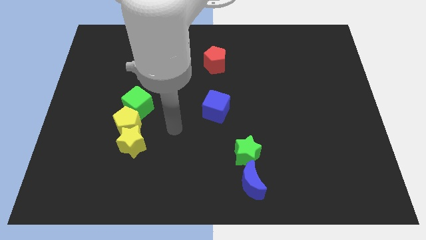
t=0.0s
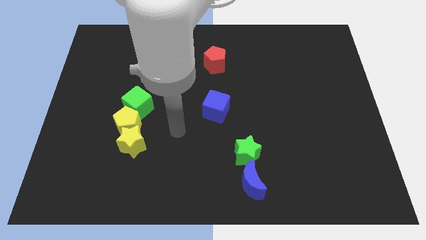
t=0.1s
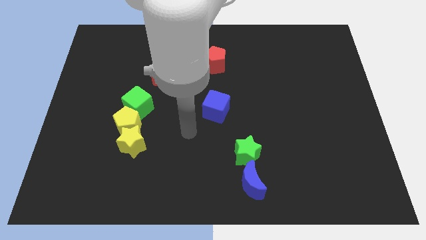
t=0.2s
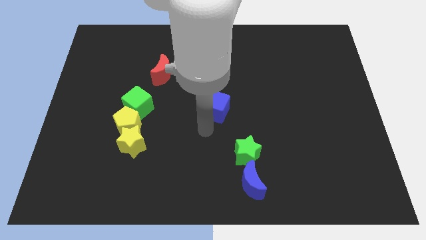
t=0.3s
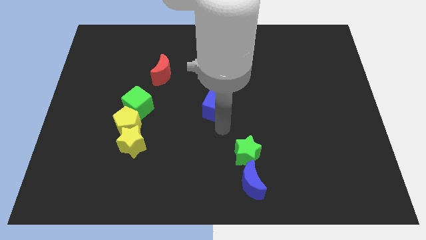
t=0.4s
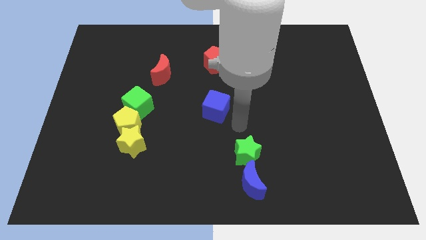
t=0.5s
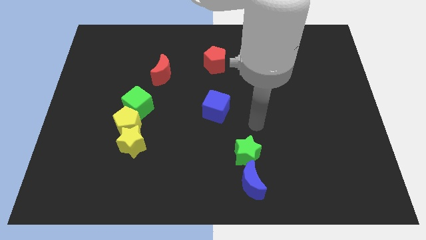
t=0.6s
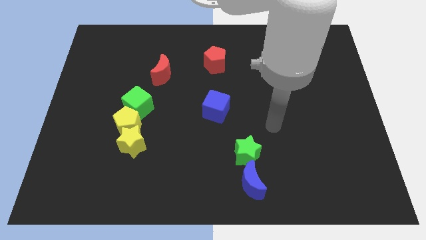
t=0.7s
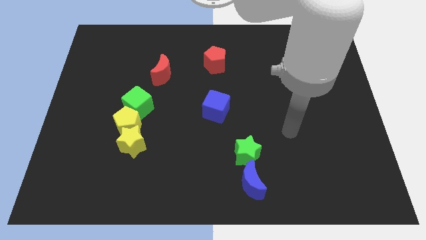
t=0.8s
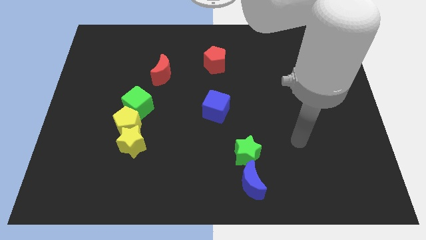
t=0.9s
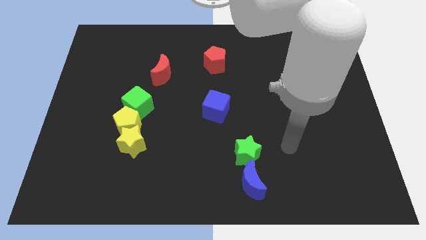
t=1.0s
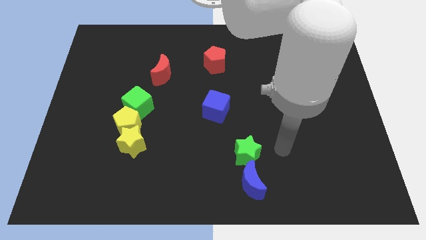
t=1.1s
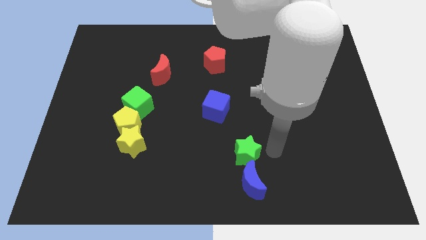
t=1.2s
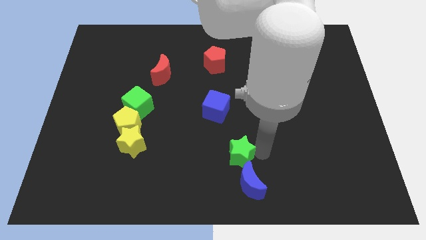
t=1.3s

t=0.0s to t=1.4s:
tap the green star

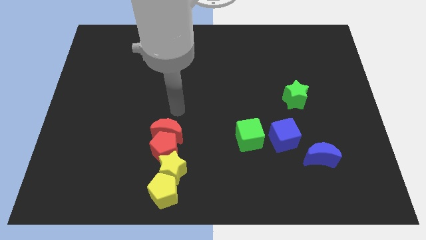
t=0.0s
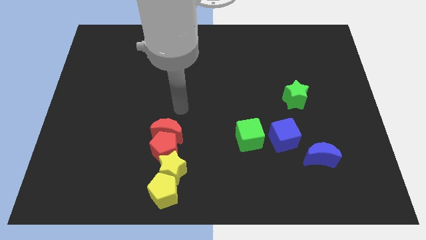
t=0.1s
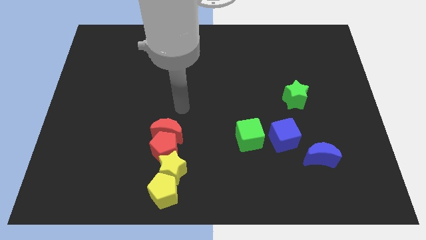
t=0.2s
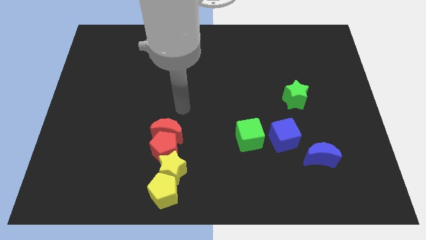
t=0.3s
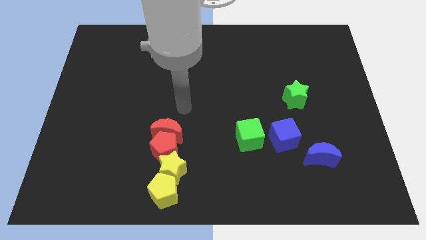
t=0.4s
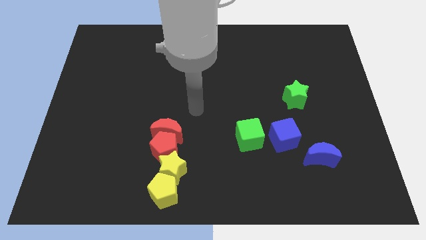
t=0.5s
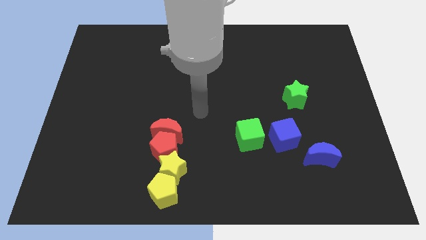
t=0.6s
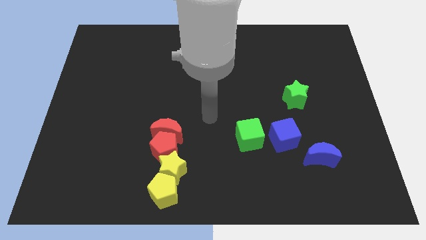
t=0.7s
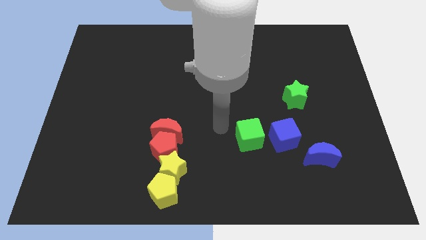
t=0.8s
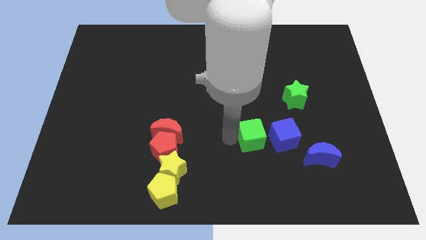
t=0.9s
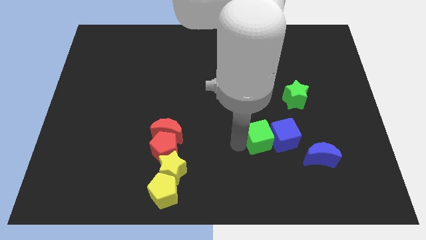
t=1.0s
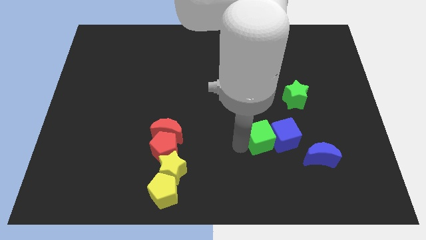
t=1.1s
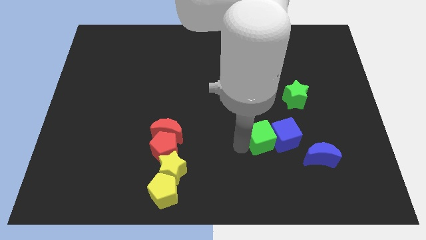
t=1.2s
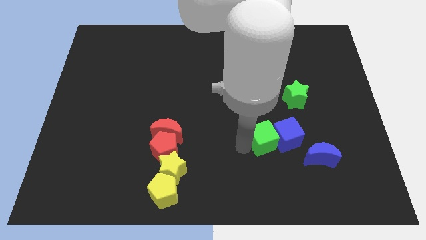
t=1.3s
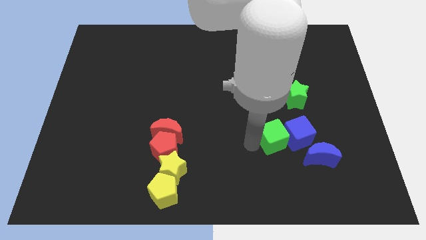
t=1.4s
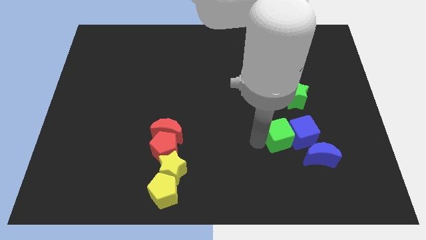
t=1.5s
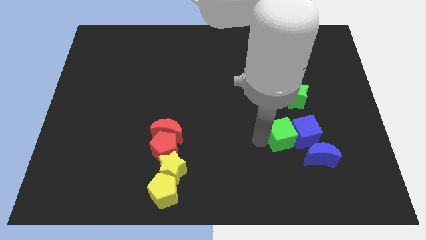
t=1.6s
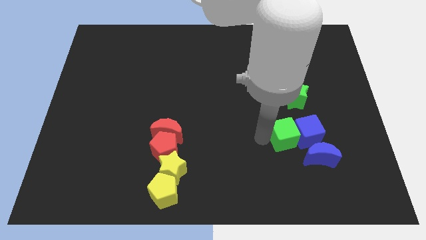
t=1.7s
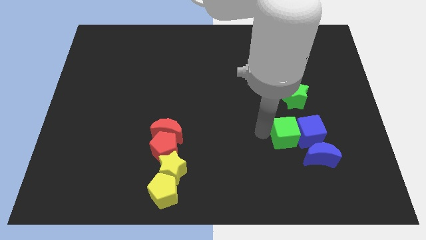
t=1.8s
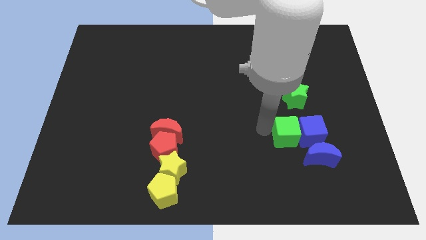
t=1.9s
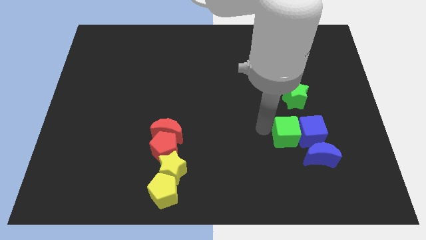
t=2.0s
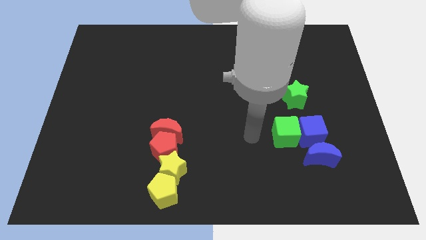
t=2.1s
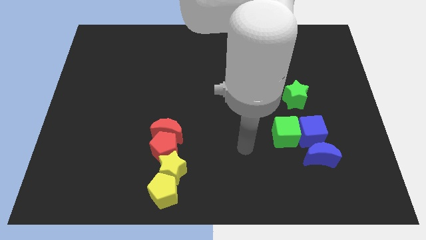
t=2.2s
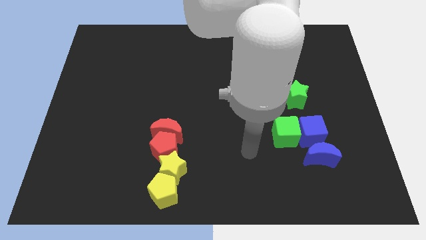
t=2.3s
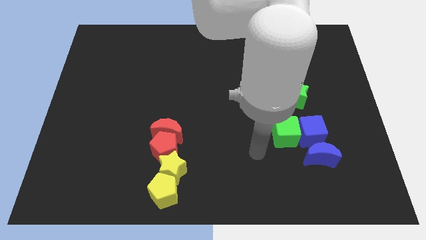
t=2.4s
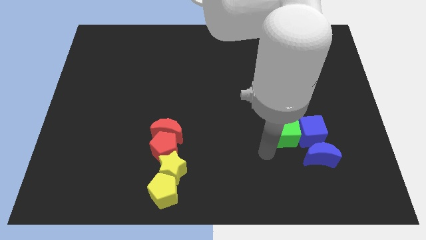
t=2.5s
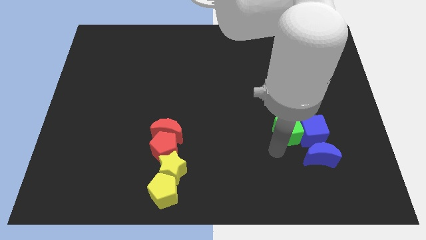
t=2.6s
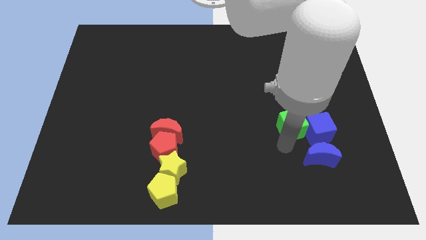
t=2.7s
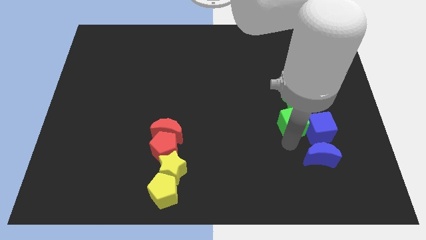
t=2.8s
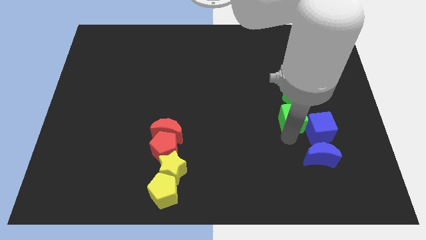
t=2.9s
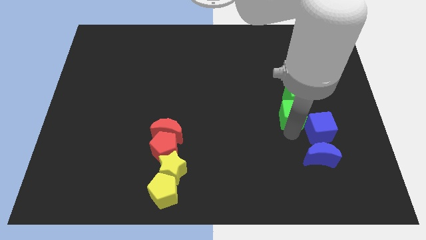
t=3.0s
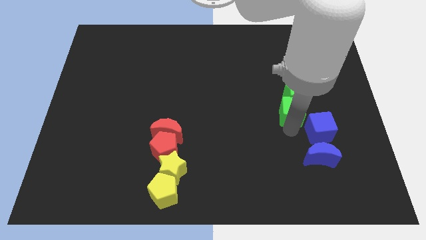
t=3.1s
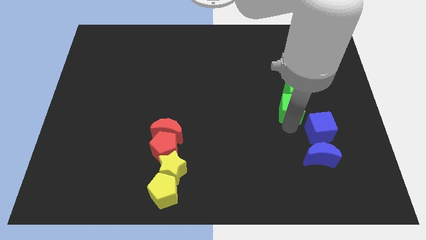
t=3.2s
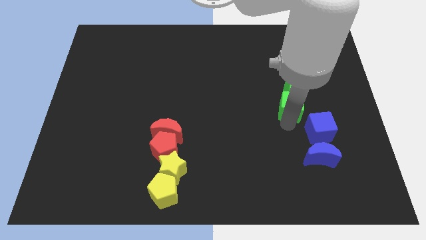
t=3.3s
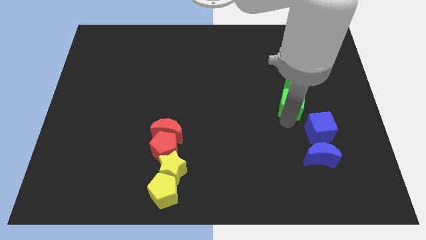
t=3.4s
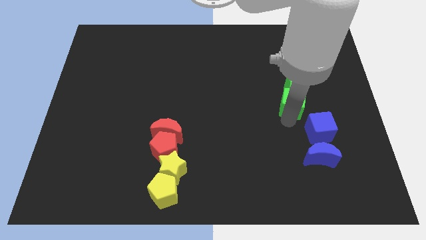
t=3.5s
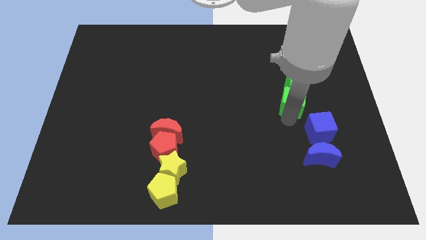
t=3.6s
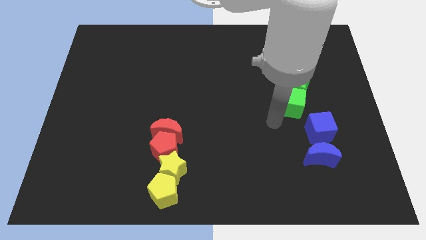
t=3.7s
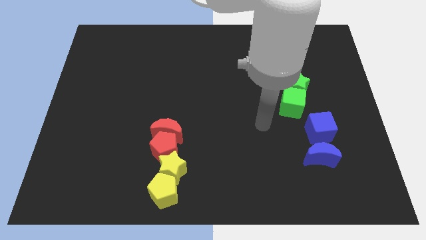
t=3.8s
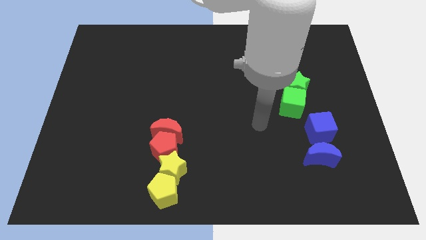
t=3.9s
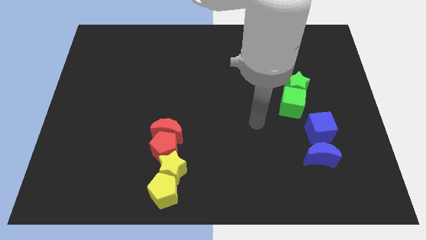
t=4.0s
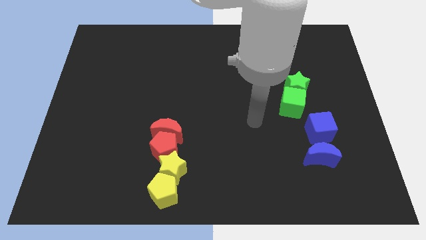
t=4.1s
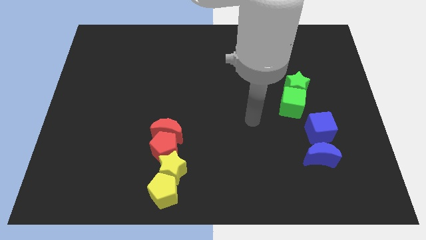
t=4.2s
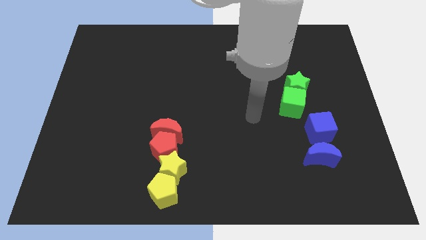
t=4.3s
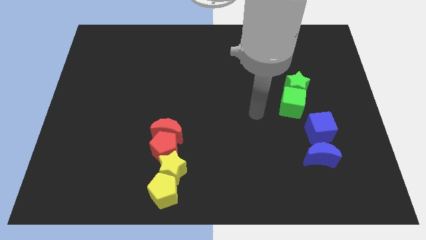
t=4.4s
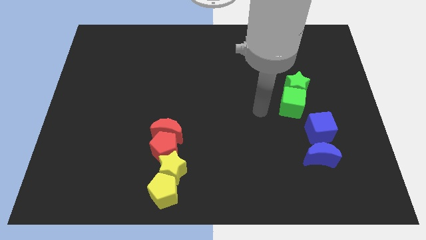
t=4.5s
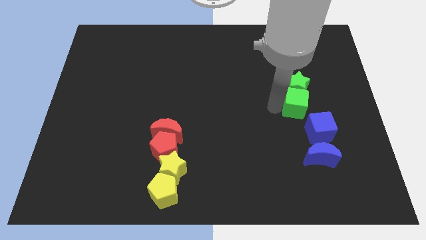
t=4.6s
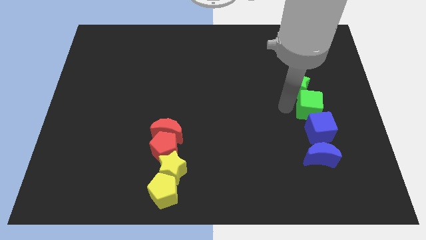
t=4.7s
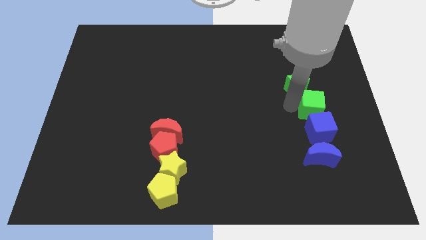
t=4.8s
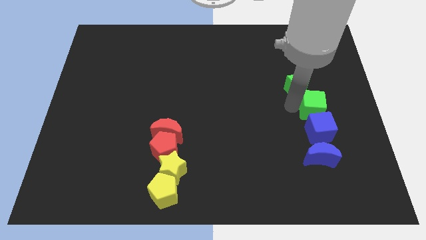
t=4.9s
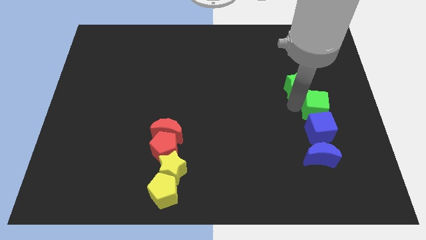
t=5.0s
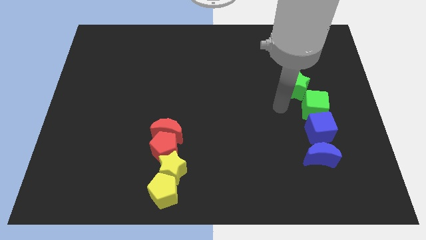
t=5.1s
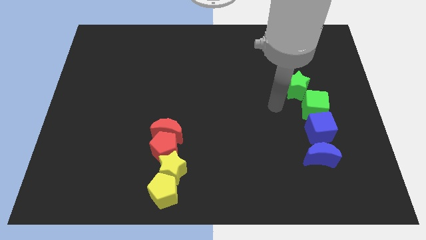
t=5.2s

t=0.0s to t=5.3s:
place the green cube above the blue cube

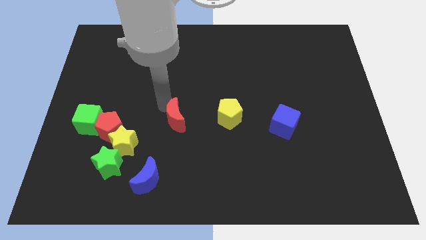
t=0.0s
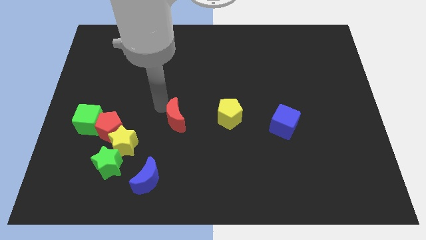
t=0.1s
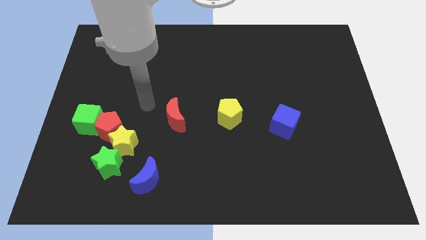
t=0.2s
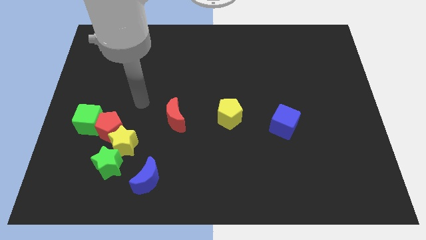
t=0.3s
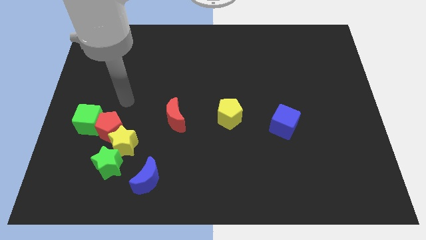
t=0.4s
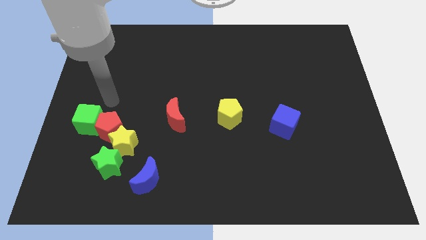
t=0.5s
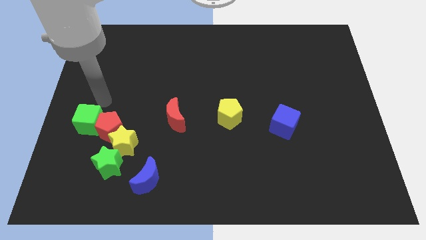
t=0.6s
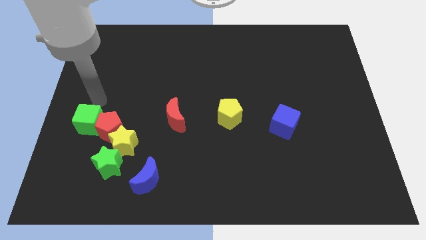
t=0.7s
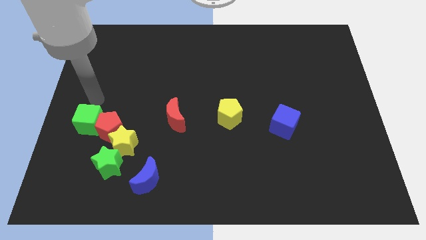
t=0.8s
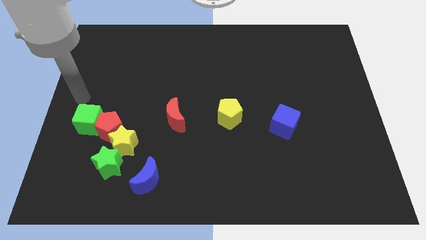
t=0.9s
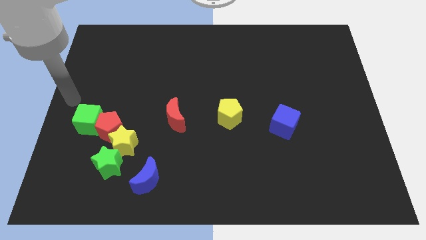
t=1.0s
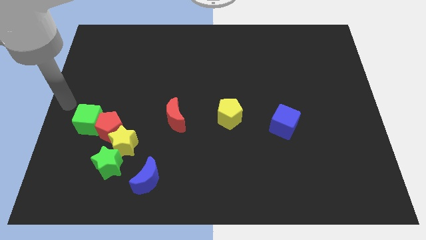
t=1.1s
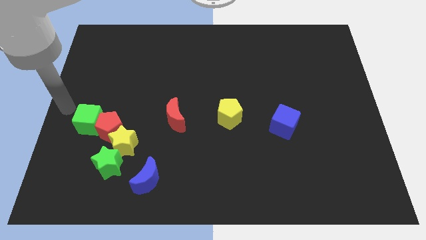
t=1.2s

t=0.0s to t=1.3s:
move your arm away from the red crescent

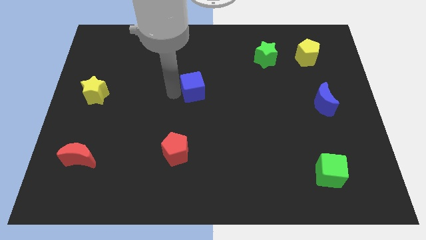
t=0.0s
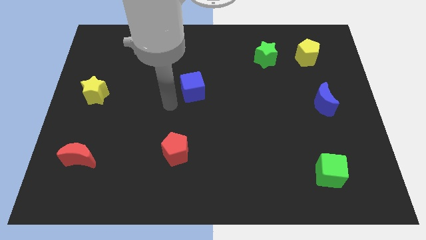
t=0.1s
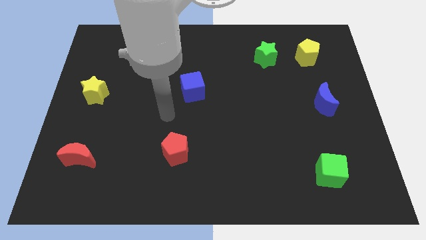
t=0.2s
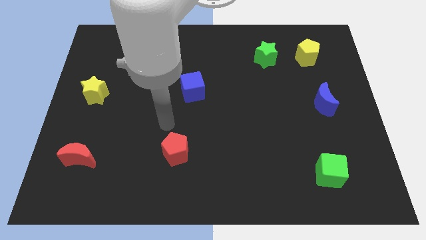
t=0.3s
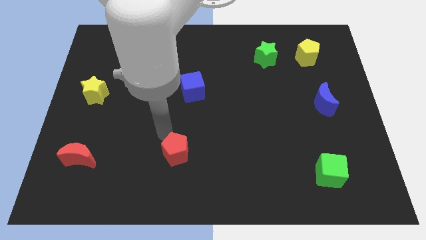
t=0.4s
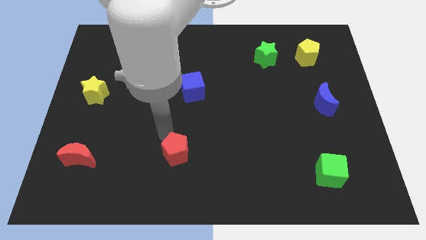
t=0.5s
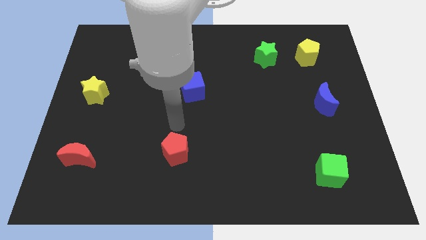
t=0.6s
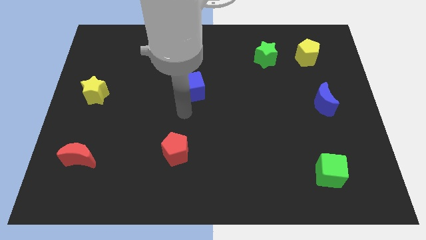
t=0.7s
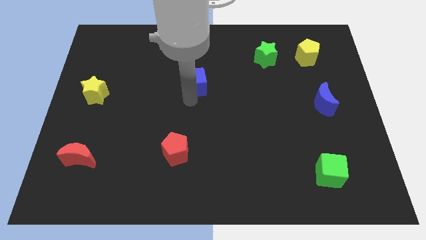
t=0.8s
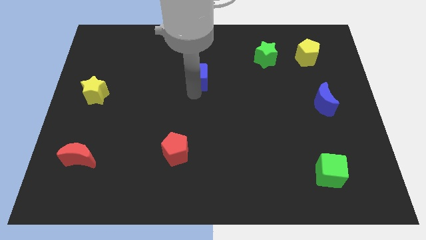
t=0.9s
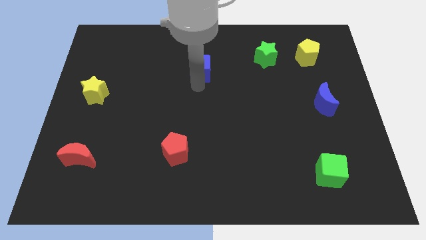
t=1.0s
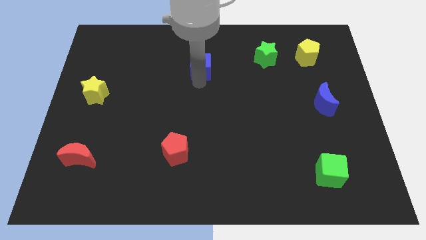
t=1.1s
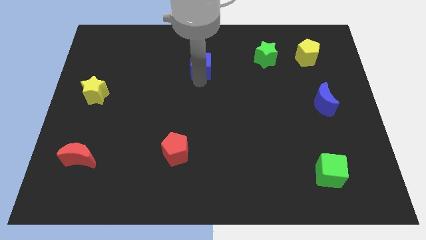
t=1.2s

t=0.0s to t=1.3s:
move the blue cube to the left of the green star
